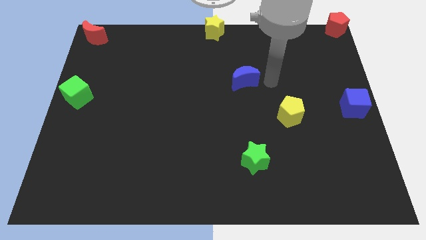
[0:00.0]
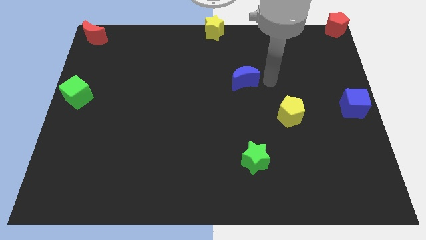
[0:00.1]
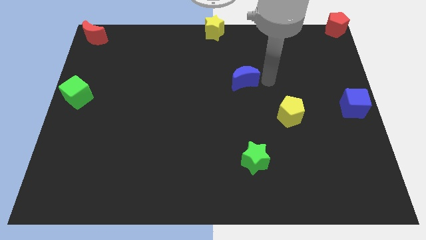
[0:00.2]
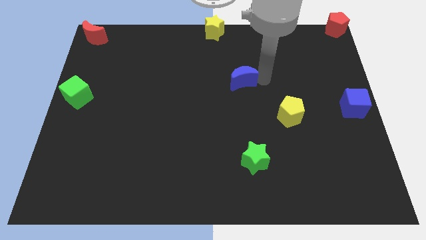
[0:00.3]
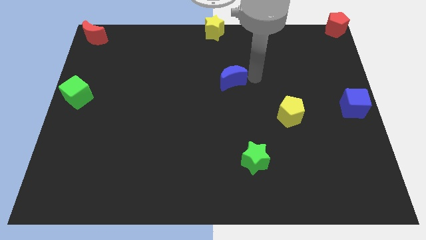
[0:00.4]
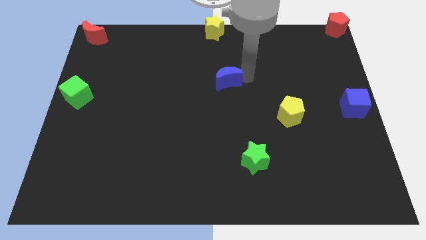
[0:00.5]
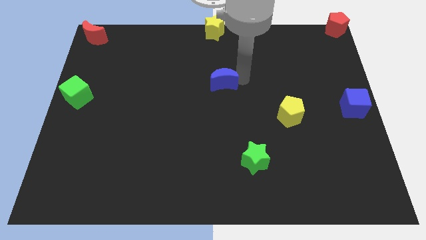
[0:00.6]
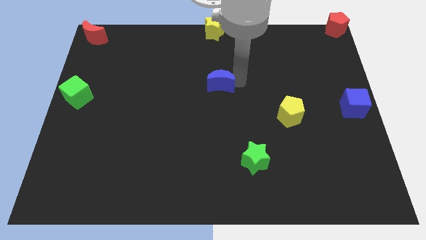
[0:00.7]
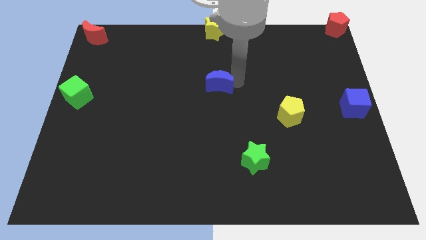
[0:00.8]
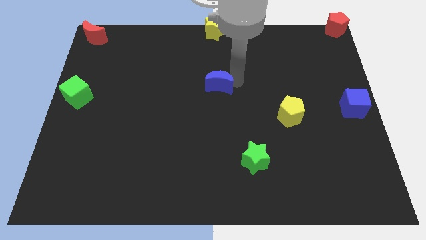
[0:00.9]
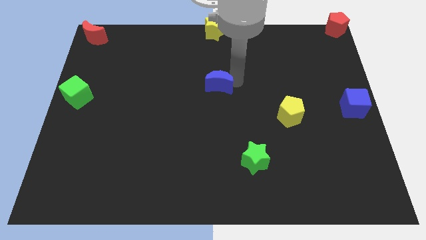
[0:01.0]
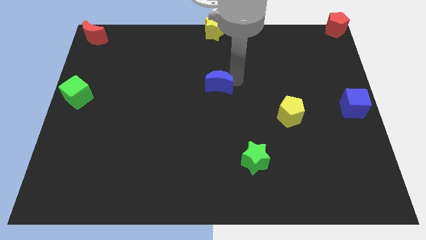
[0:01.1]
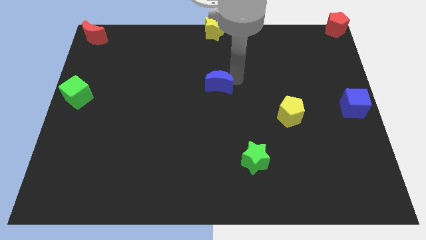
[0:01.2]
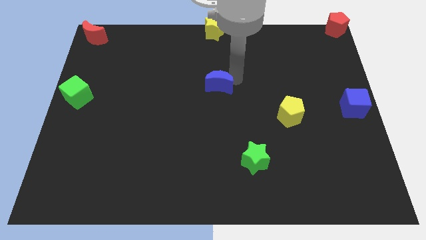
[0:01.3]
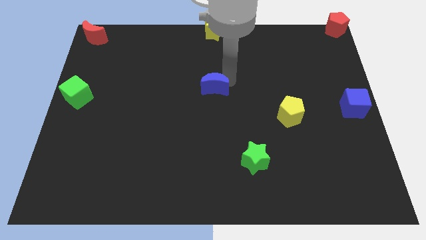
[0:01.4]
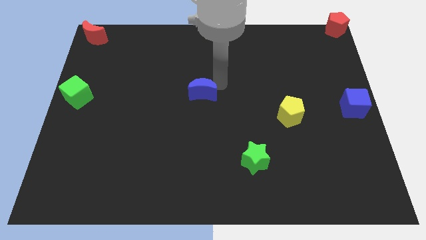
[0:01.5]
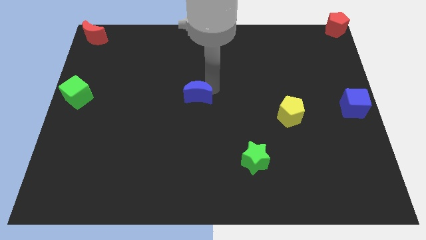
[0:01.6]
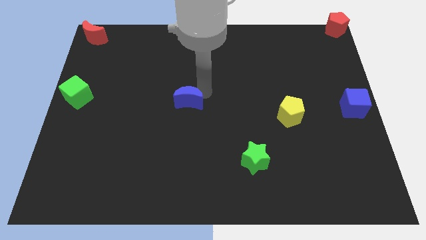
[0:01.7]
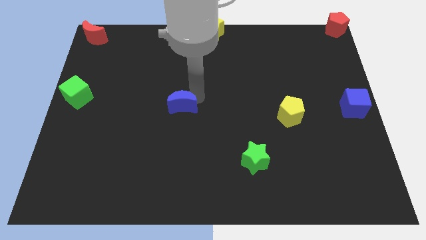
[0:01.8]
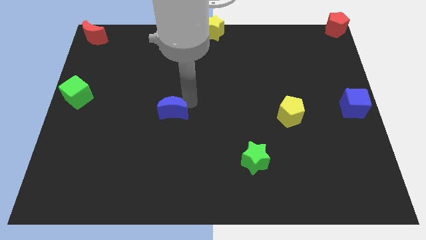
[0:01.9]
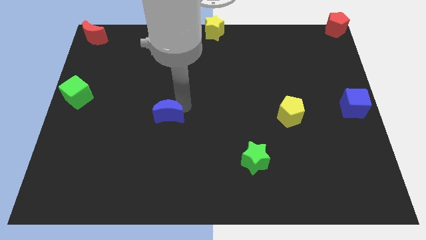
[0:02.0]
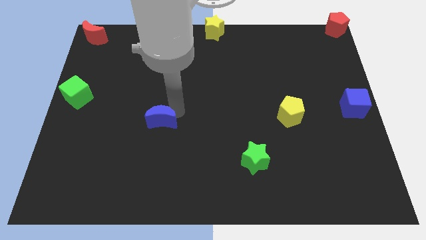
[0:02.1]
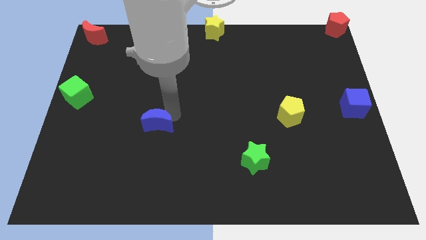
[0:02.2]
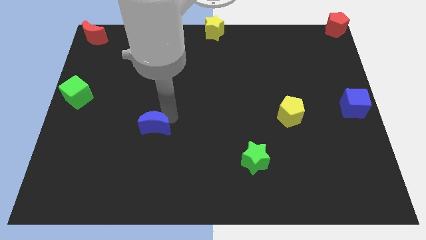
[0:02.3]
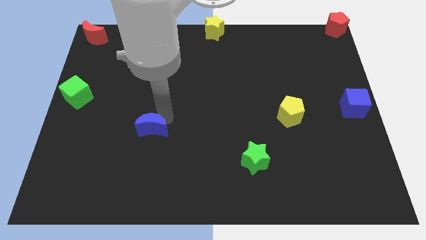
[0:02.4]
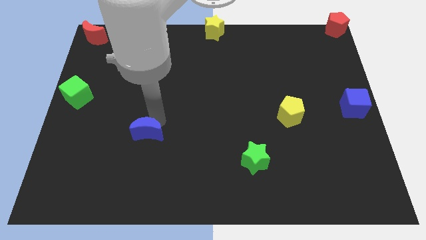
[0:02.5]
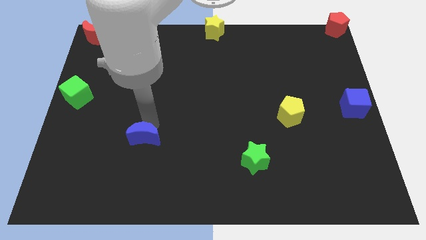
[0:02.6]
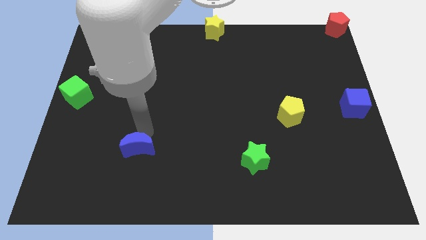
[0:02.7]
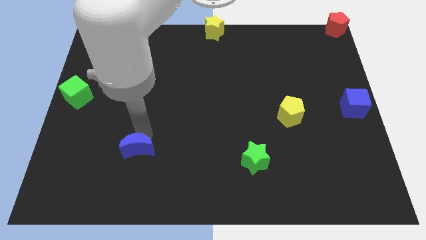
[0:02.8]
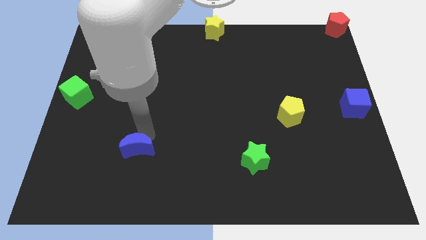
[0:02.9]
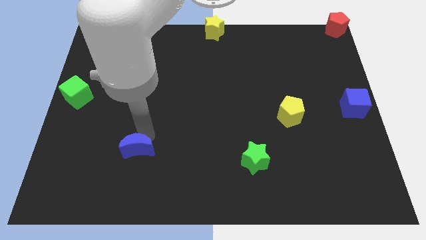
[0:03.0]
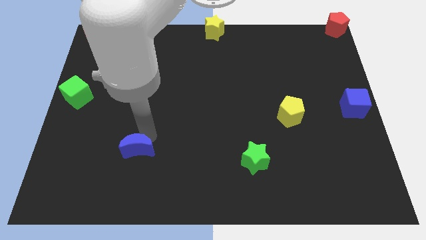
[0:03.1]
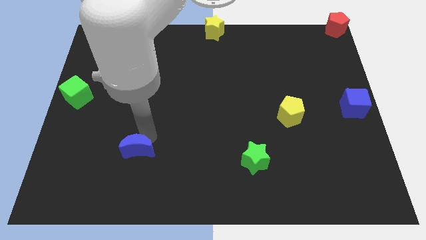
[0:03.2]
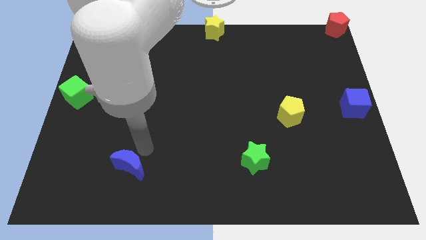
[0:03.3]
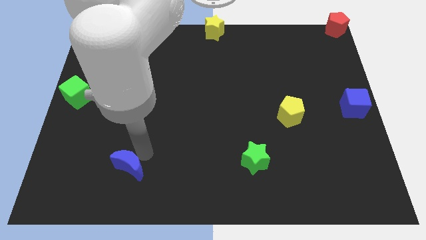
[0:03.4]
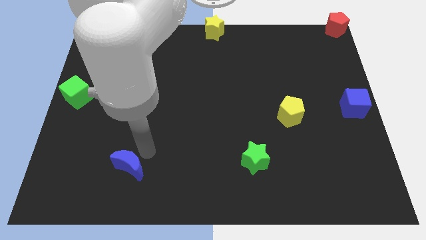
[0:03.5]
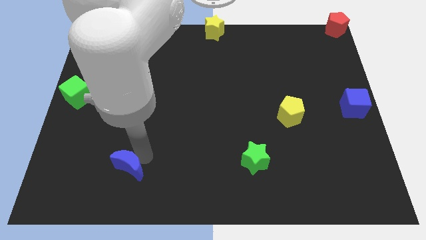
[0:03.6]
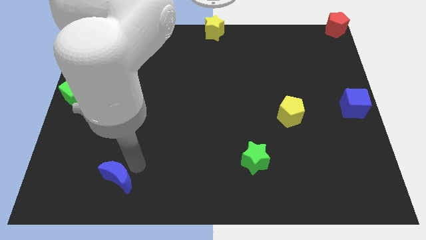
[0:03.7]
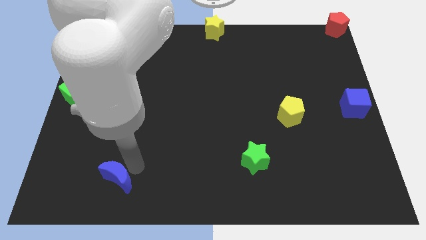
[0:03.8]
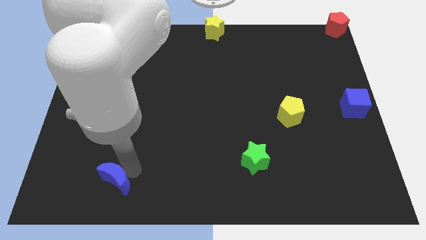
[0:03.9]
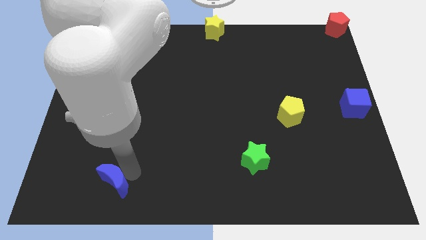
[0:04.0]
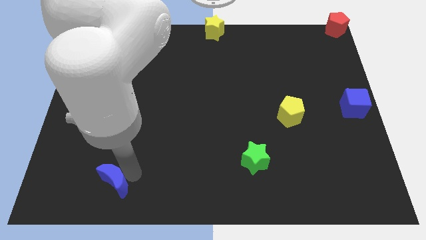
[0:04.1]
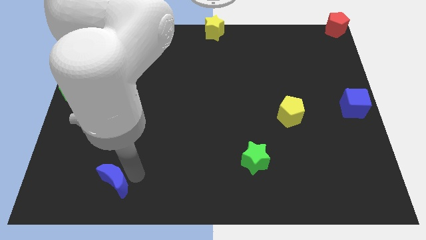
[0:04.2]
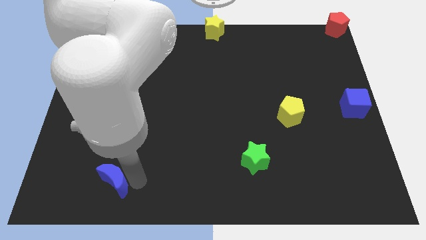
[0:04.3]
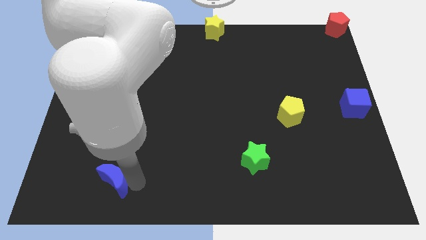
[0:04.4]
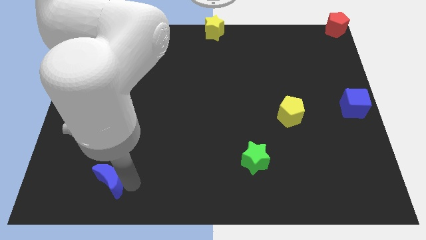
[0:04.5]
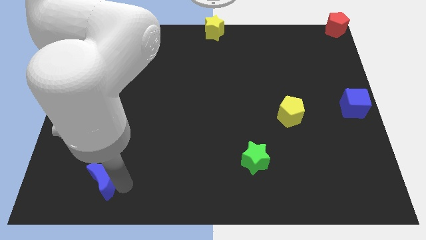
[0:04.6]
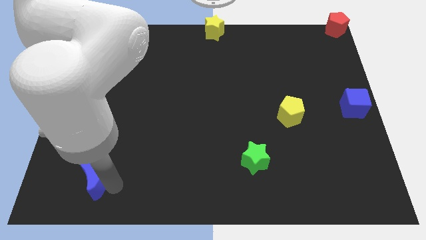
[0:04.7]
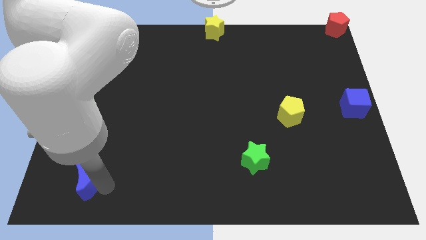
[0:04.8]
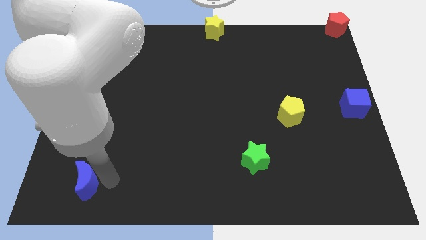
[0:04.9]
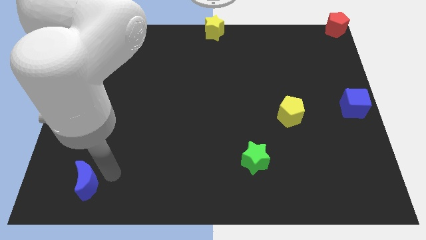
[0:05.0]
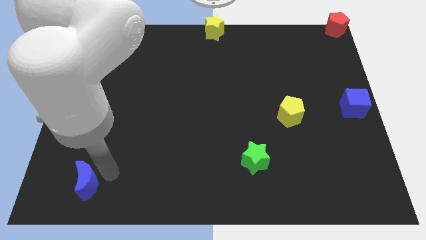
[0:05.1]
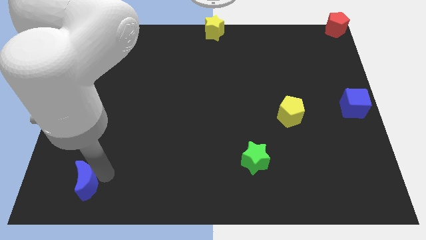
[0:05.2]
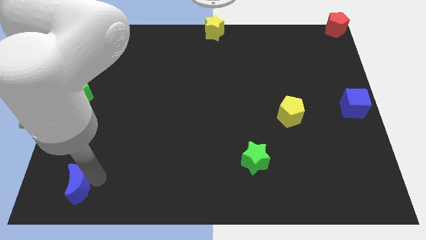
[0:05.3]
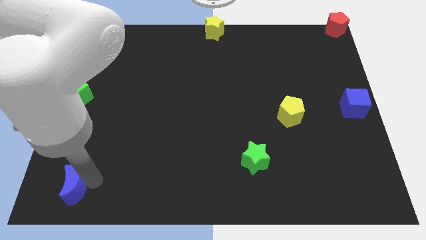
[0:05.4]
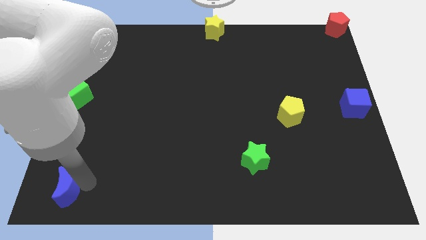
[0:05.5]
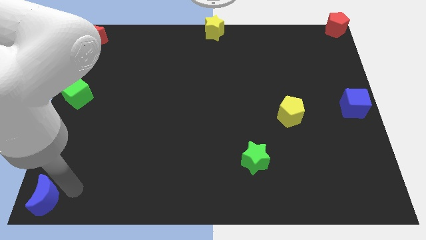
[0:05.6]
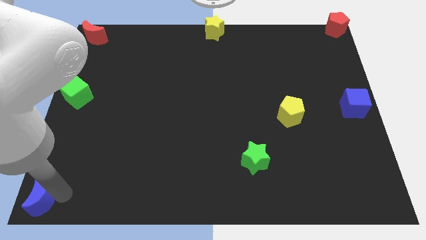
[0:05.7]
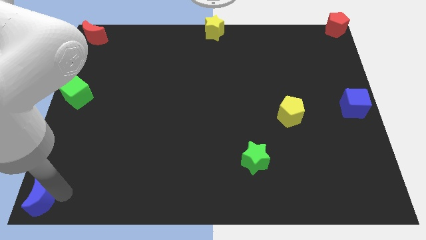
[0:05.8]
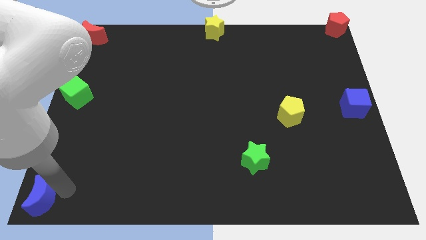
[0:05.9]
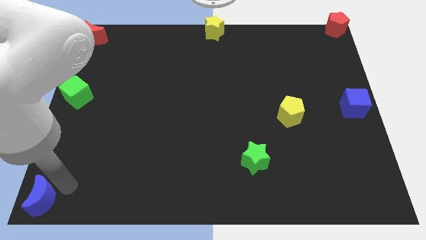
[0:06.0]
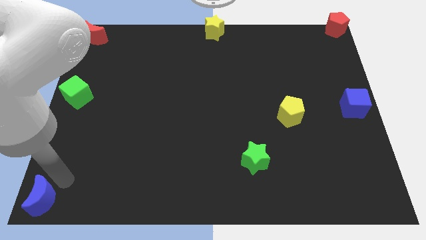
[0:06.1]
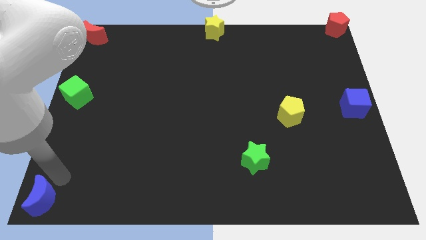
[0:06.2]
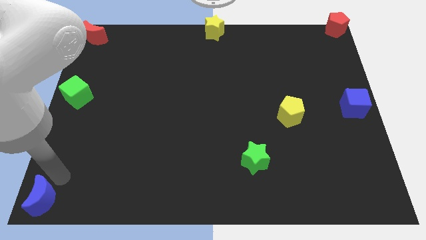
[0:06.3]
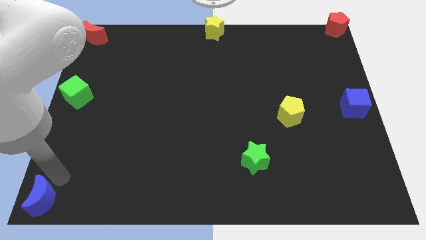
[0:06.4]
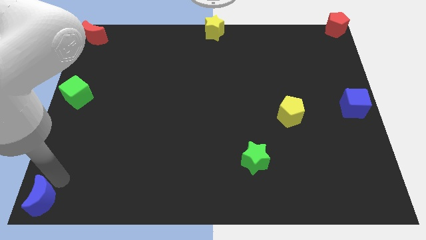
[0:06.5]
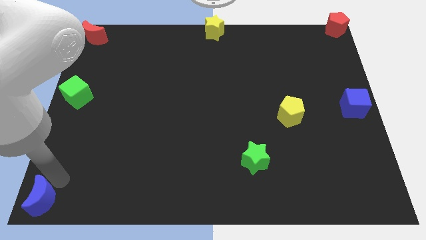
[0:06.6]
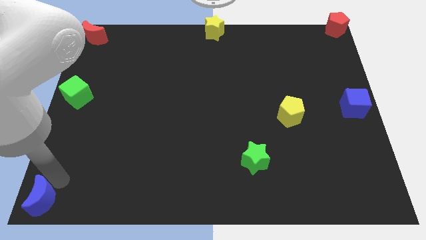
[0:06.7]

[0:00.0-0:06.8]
drag the blue moon to the bottom left

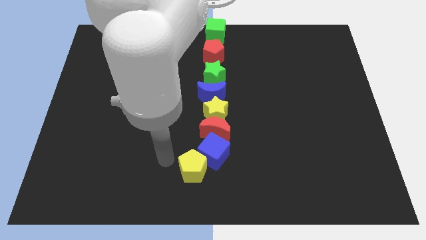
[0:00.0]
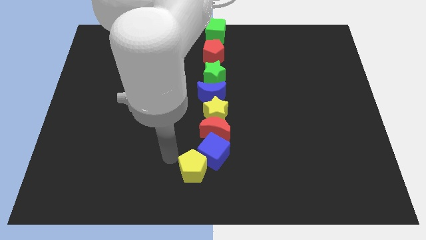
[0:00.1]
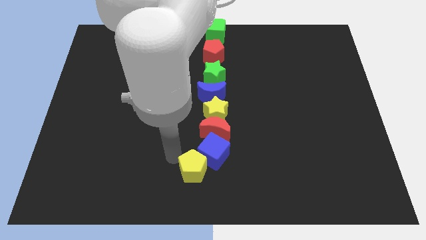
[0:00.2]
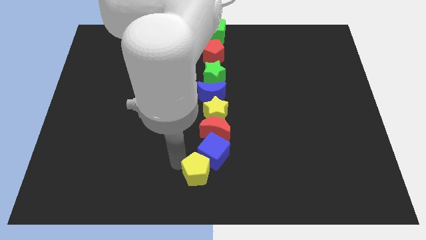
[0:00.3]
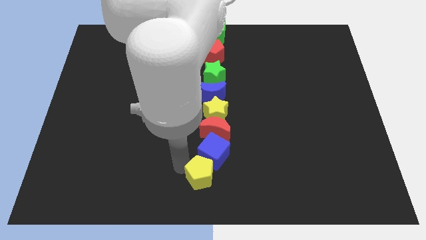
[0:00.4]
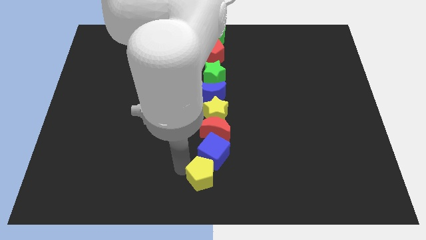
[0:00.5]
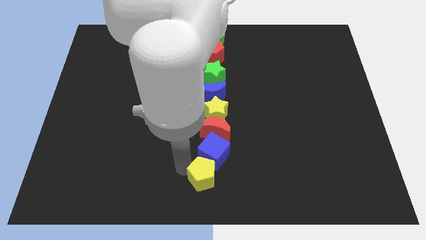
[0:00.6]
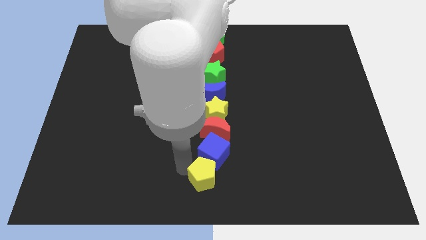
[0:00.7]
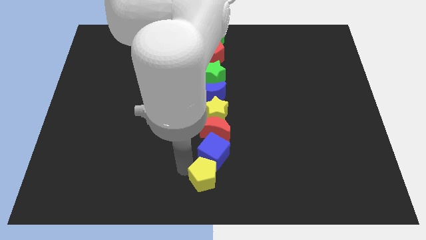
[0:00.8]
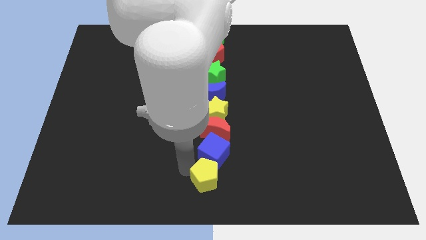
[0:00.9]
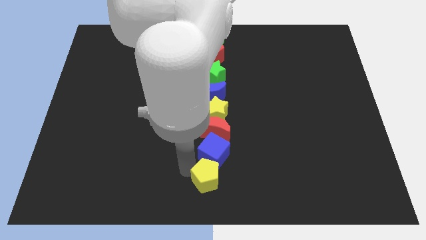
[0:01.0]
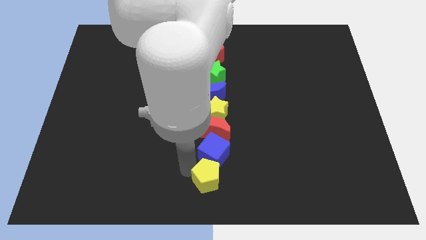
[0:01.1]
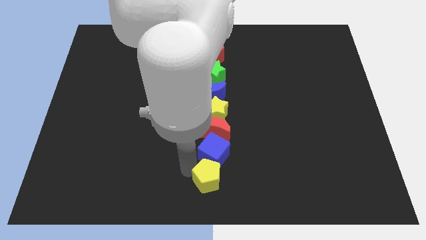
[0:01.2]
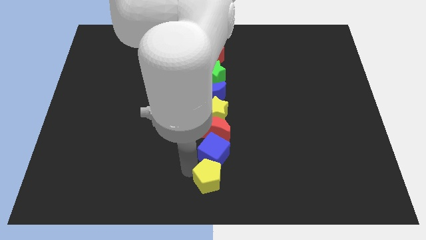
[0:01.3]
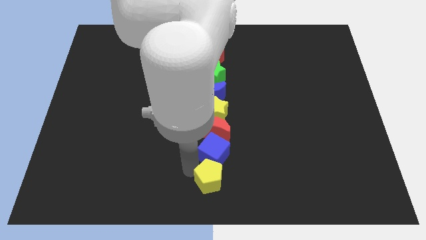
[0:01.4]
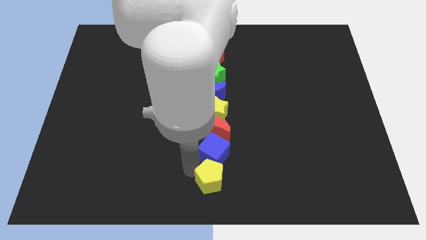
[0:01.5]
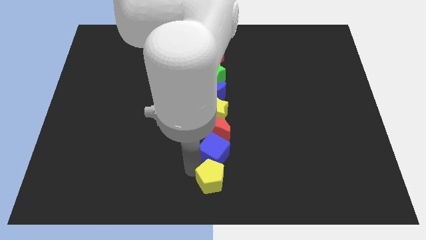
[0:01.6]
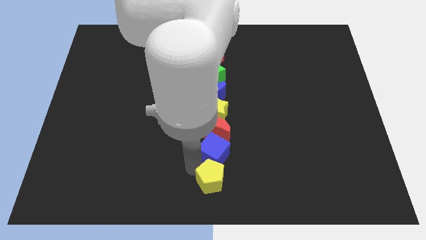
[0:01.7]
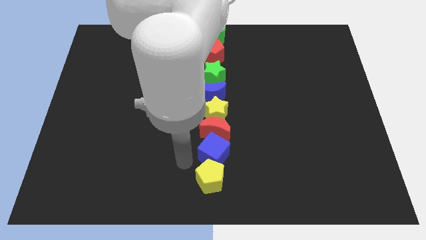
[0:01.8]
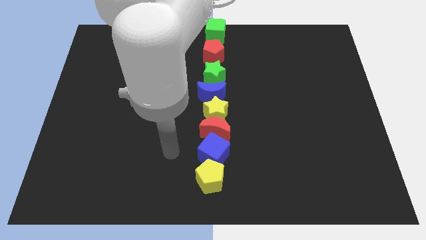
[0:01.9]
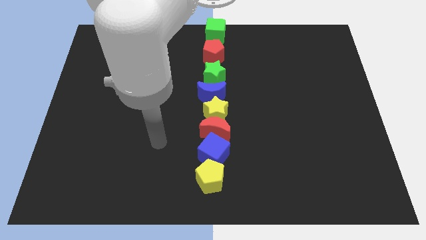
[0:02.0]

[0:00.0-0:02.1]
push yellow pentagon below blue cube to form a line
